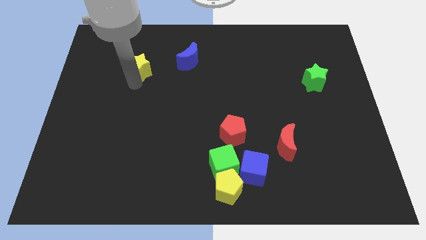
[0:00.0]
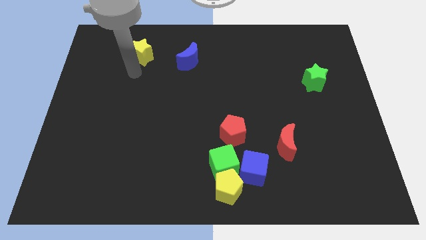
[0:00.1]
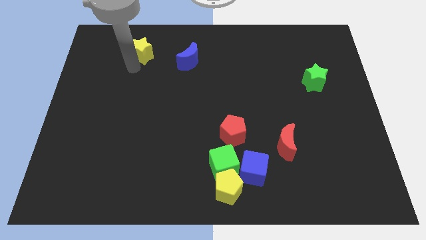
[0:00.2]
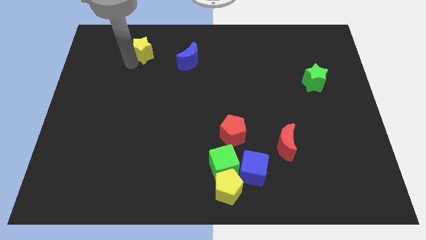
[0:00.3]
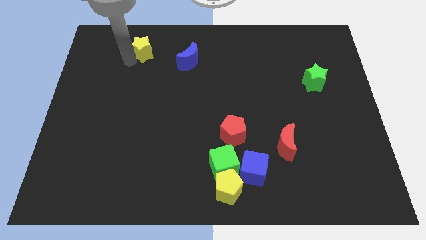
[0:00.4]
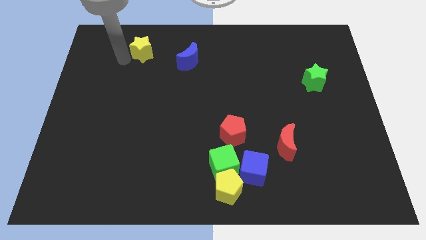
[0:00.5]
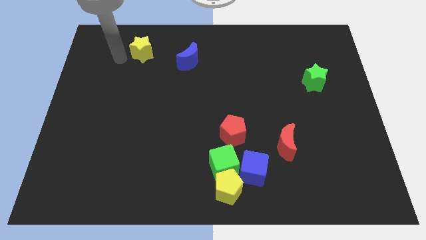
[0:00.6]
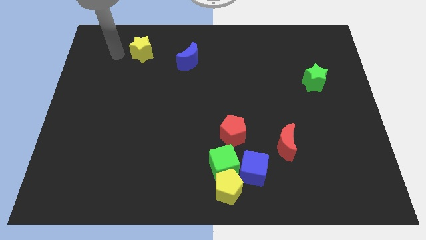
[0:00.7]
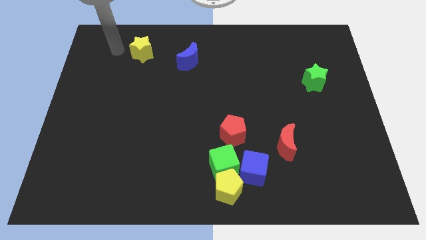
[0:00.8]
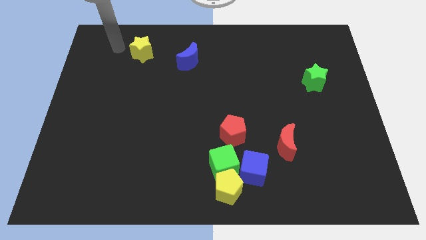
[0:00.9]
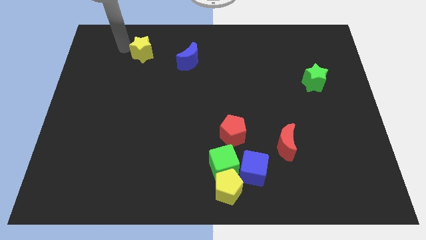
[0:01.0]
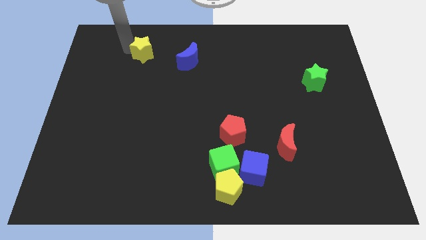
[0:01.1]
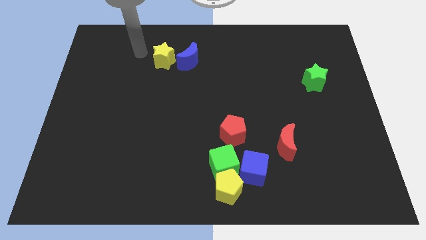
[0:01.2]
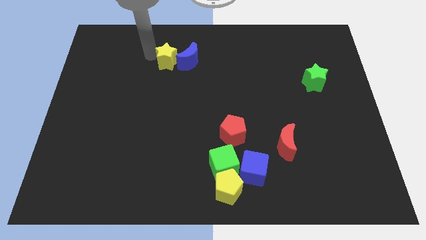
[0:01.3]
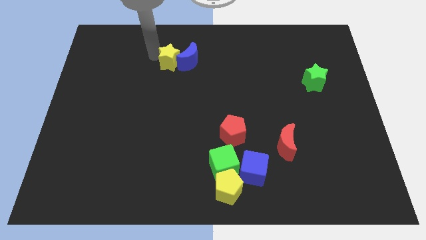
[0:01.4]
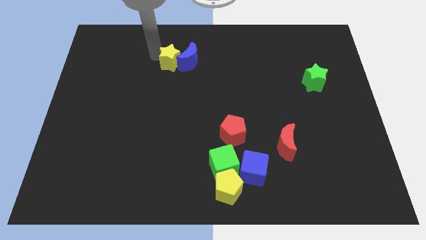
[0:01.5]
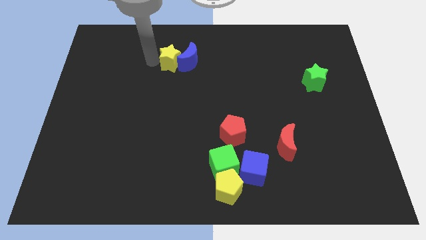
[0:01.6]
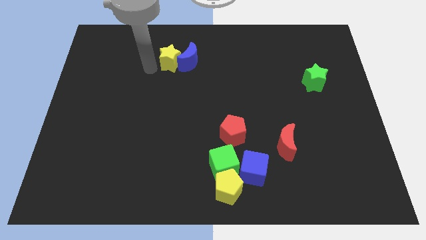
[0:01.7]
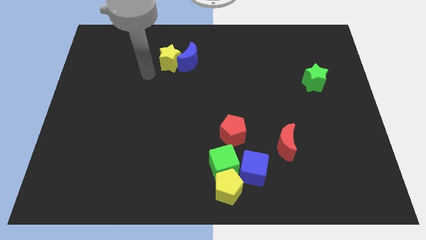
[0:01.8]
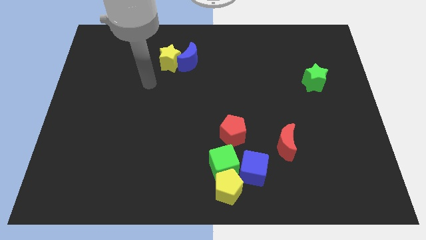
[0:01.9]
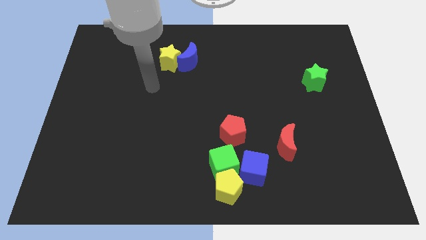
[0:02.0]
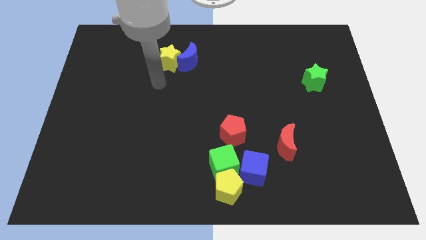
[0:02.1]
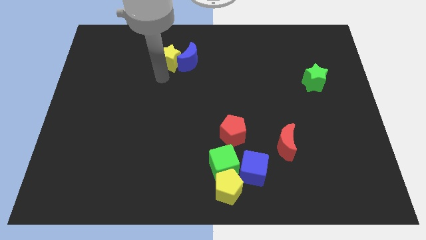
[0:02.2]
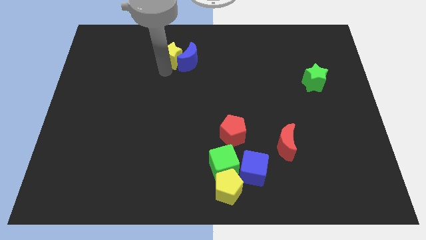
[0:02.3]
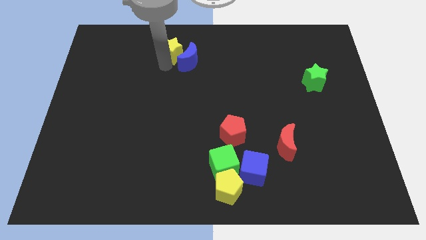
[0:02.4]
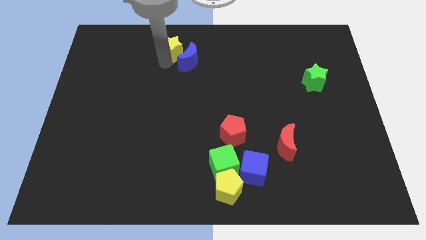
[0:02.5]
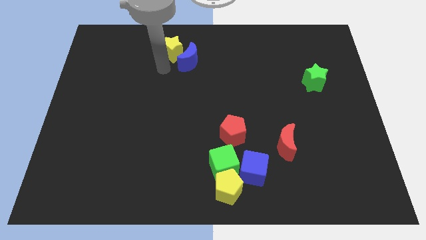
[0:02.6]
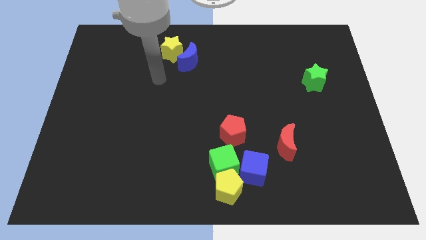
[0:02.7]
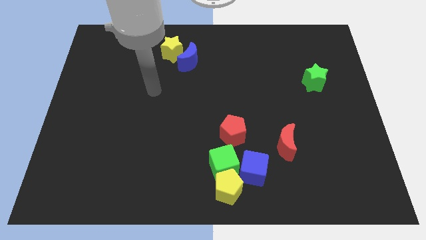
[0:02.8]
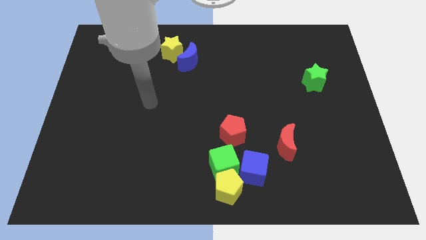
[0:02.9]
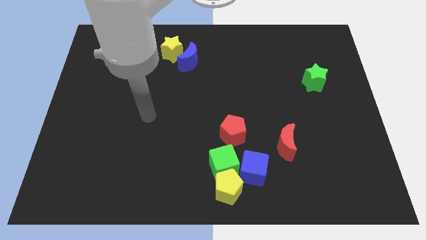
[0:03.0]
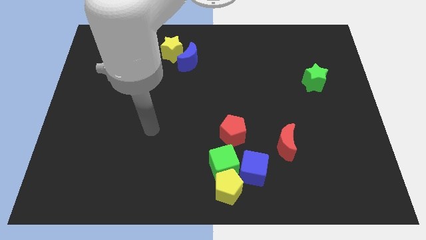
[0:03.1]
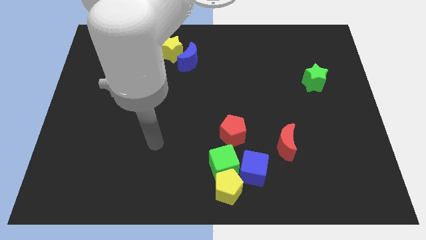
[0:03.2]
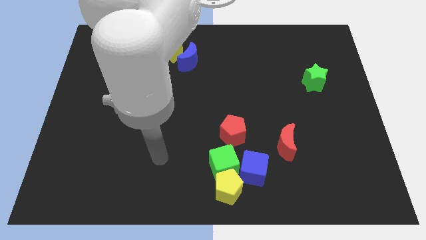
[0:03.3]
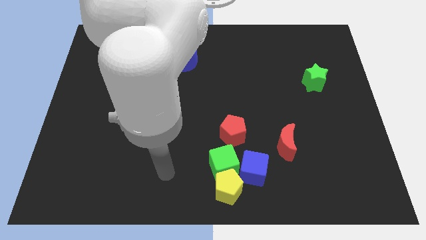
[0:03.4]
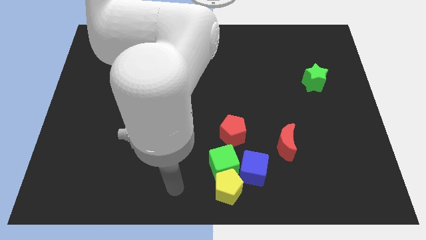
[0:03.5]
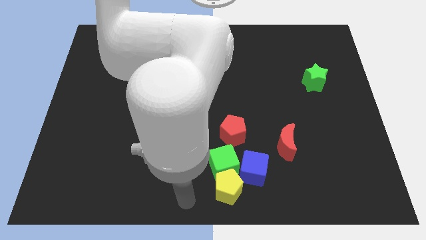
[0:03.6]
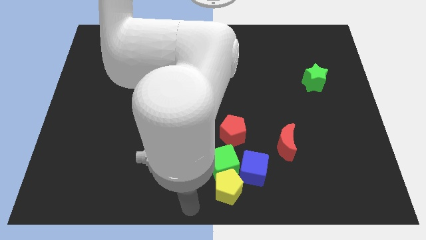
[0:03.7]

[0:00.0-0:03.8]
move yellow star towards blue moon

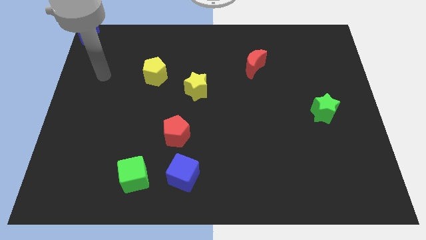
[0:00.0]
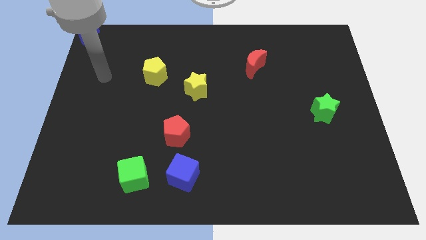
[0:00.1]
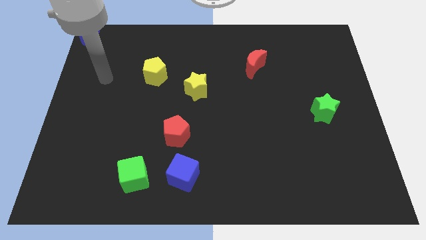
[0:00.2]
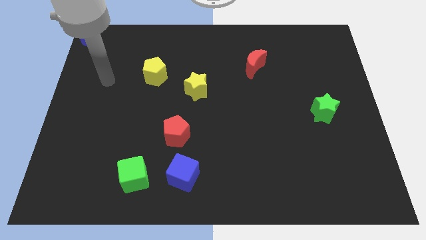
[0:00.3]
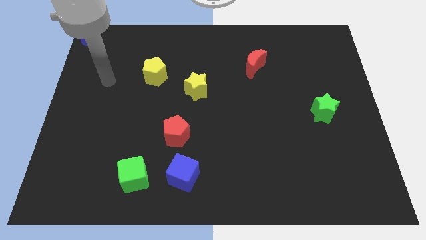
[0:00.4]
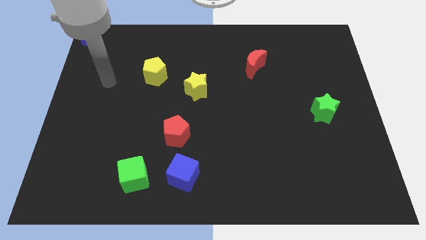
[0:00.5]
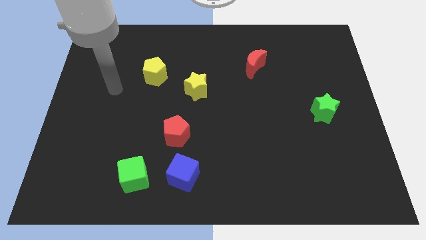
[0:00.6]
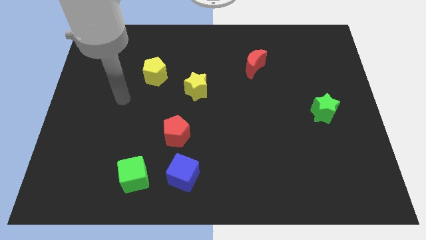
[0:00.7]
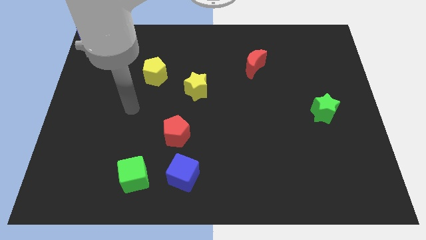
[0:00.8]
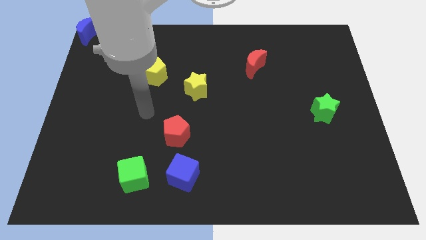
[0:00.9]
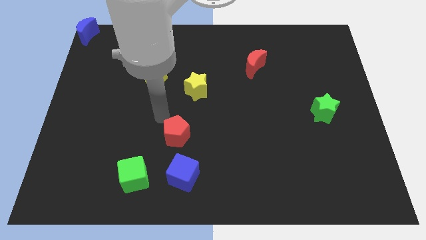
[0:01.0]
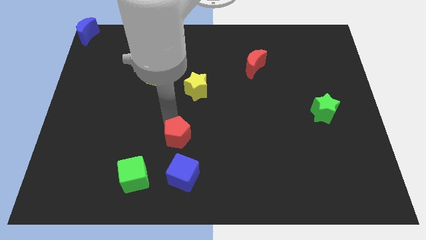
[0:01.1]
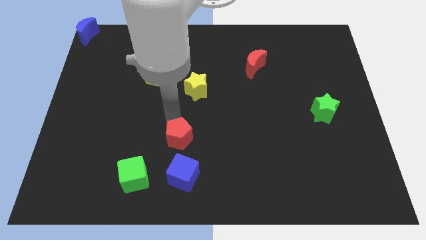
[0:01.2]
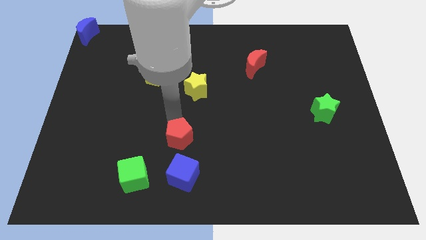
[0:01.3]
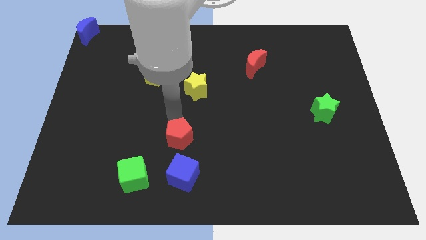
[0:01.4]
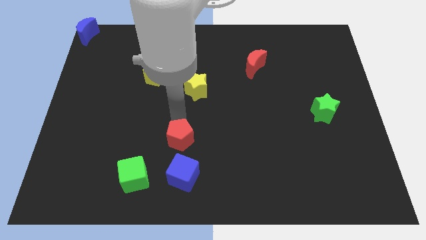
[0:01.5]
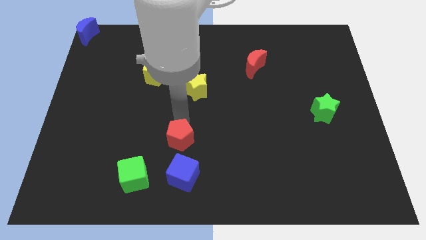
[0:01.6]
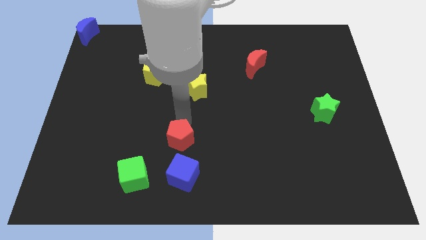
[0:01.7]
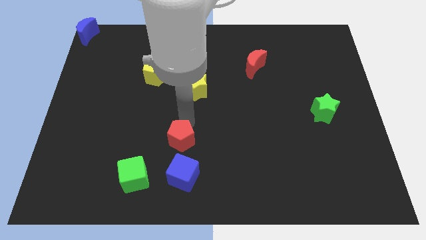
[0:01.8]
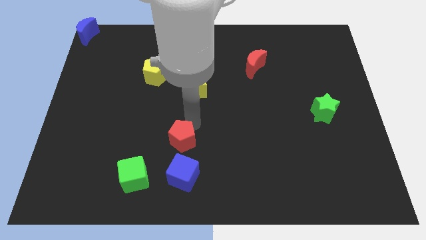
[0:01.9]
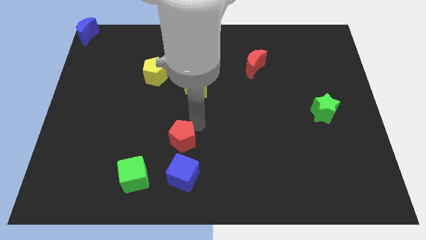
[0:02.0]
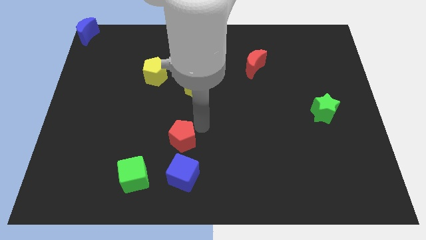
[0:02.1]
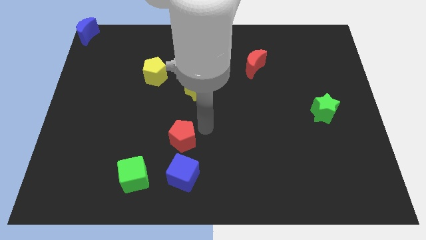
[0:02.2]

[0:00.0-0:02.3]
tap red pentagon slightly

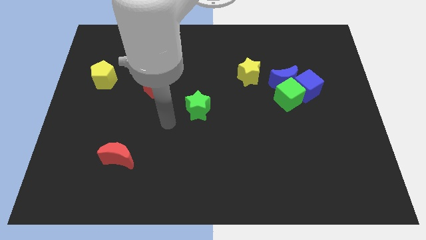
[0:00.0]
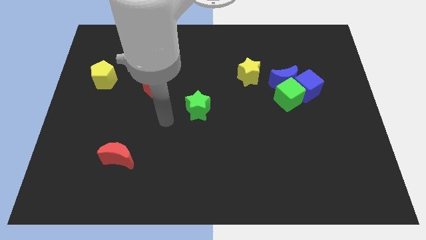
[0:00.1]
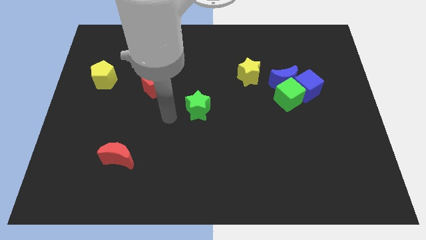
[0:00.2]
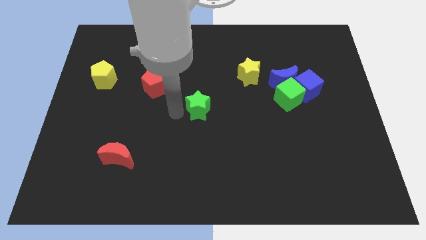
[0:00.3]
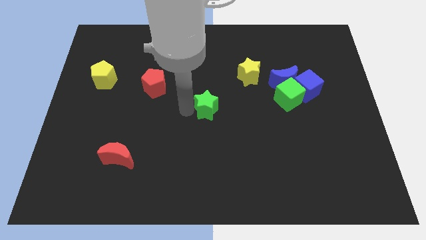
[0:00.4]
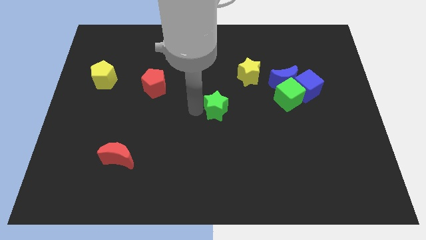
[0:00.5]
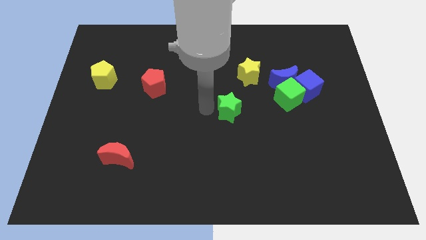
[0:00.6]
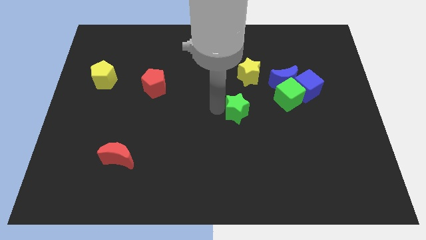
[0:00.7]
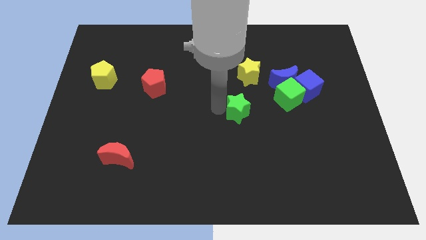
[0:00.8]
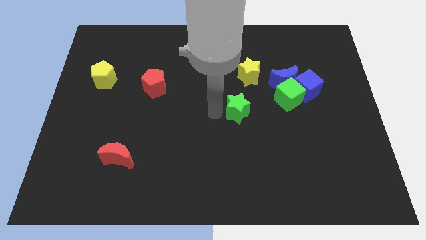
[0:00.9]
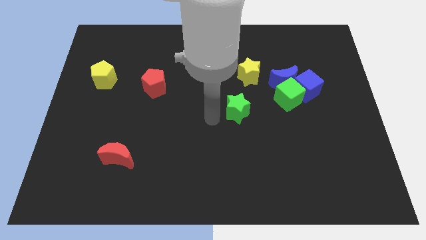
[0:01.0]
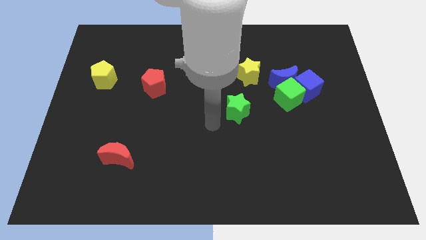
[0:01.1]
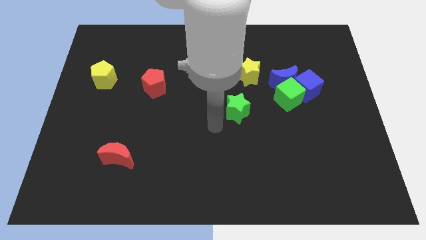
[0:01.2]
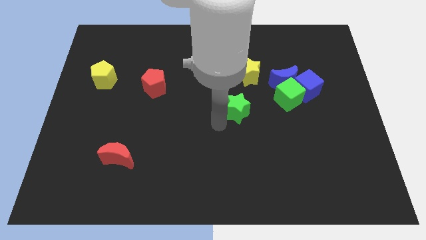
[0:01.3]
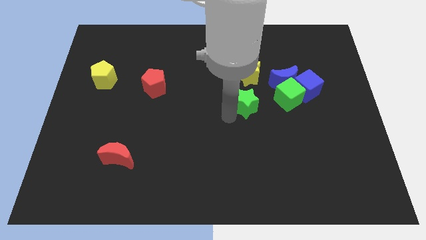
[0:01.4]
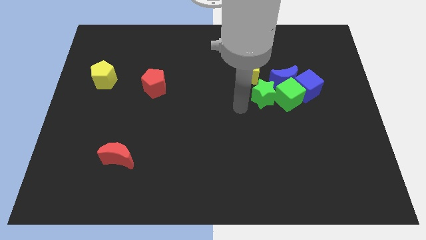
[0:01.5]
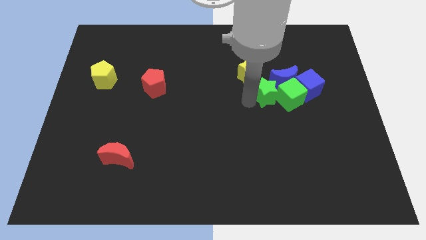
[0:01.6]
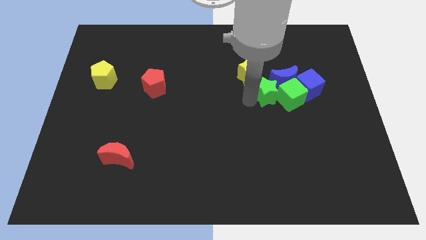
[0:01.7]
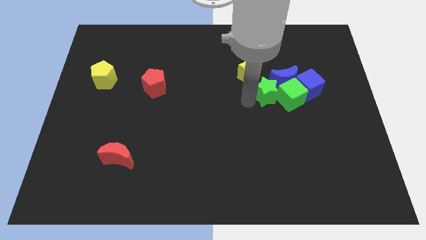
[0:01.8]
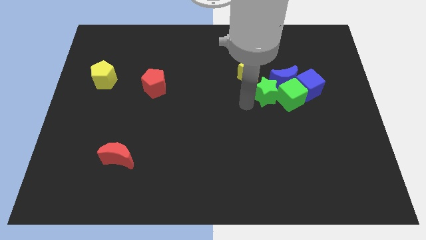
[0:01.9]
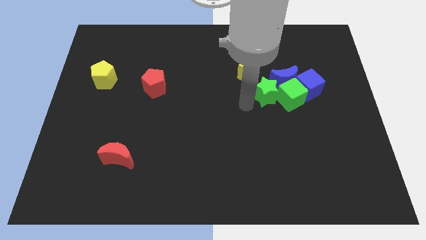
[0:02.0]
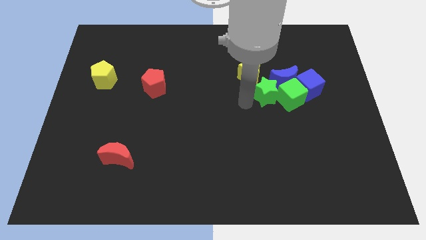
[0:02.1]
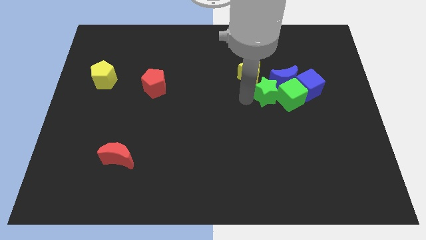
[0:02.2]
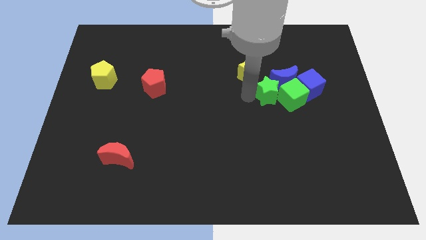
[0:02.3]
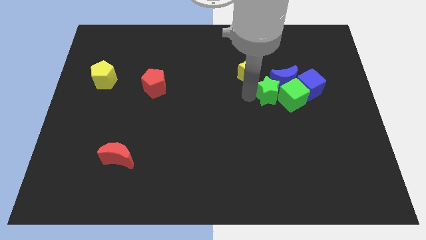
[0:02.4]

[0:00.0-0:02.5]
push green star in to green cube

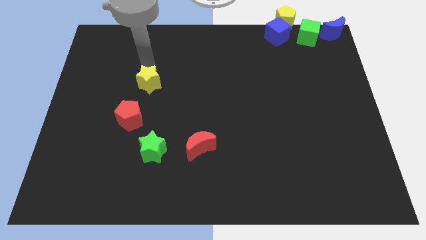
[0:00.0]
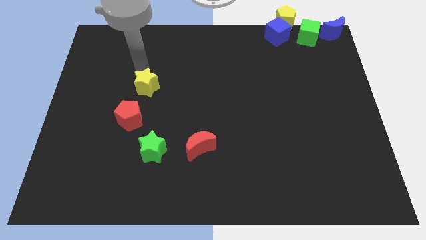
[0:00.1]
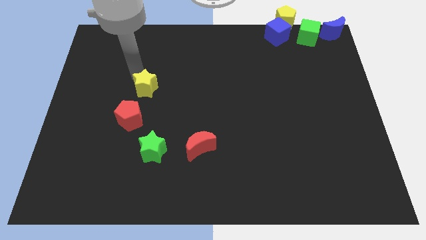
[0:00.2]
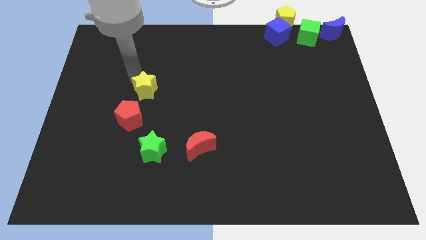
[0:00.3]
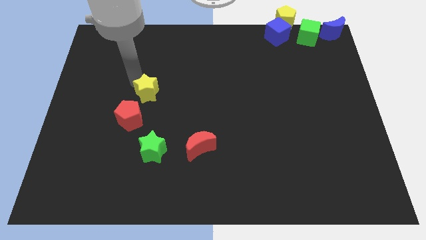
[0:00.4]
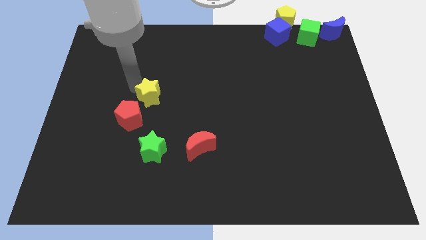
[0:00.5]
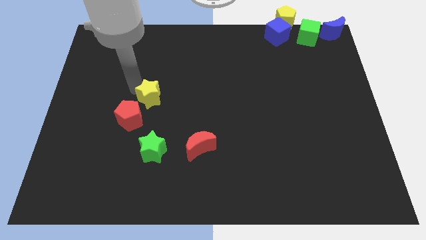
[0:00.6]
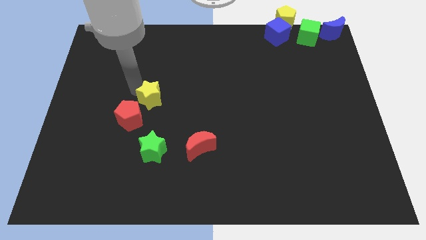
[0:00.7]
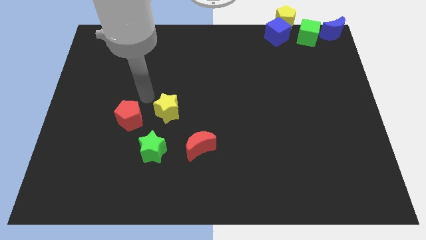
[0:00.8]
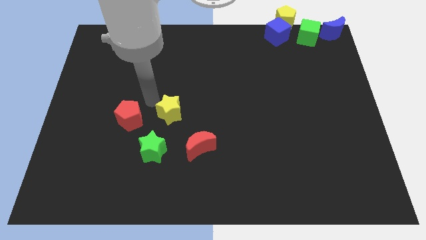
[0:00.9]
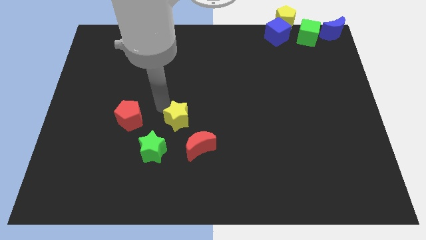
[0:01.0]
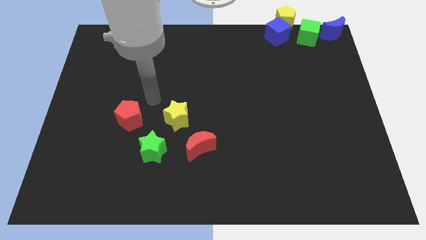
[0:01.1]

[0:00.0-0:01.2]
put the yellow star parallel right to the red pentagon
